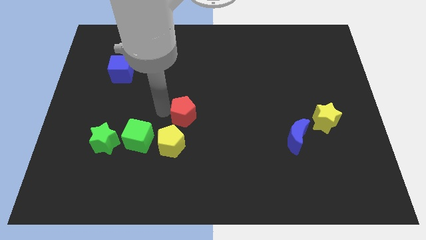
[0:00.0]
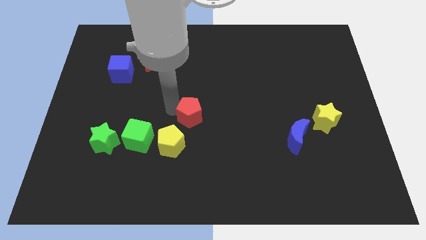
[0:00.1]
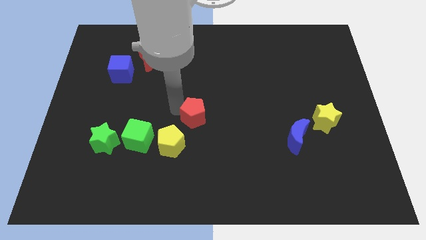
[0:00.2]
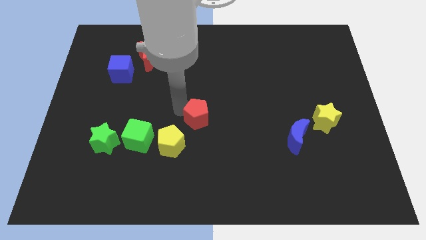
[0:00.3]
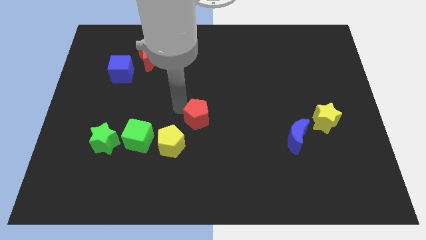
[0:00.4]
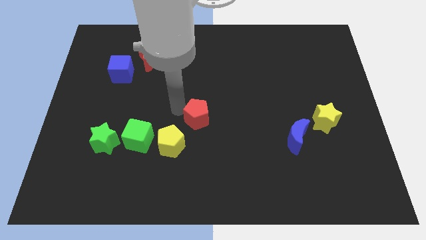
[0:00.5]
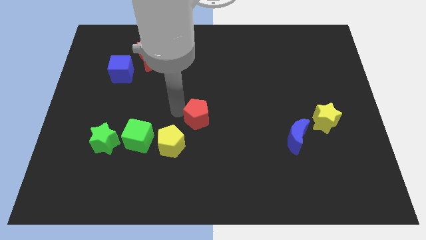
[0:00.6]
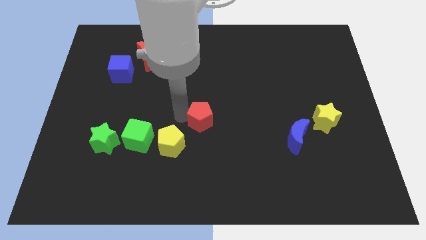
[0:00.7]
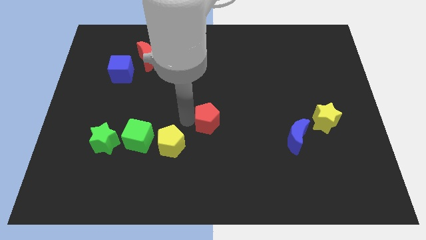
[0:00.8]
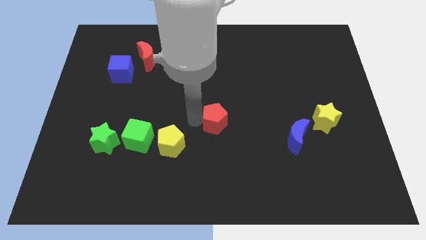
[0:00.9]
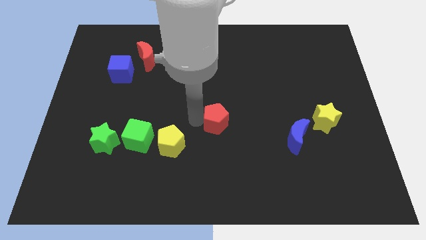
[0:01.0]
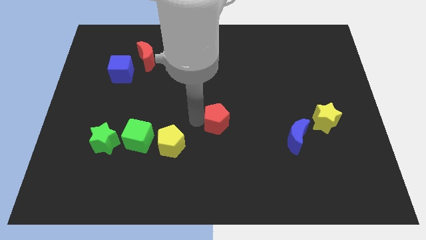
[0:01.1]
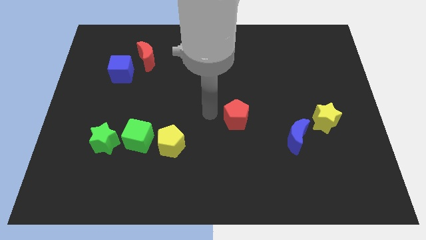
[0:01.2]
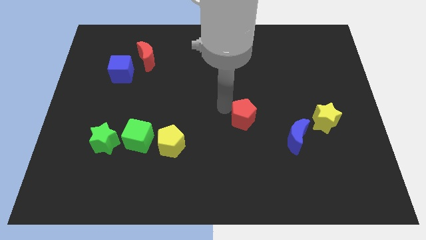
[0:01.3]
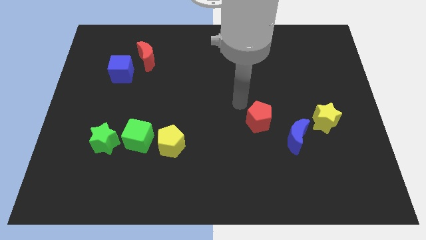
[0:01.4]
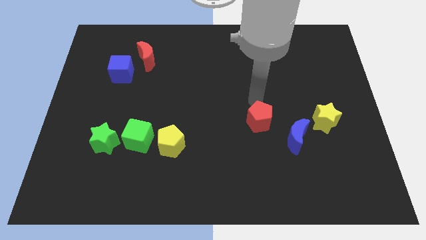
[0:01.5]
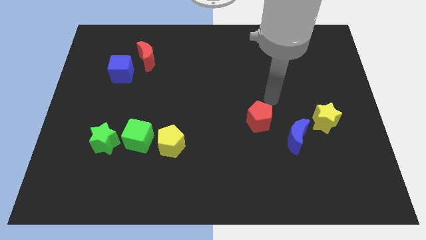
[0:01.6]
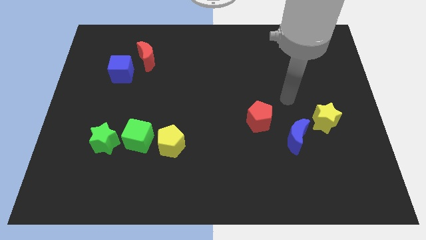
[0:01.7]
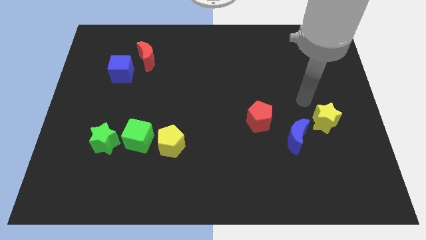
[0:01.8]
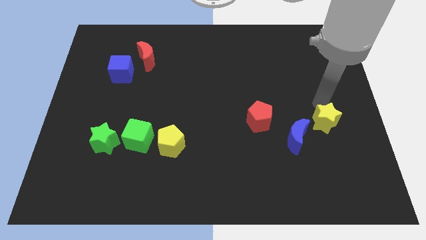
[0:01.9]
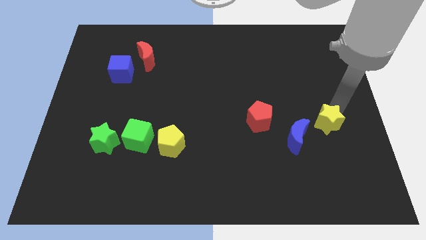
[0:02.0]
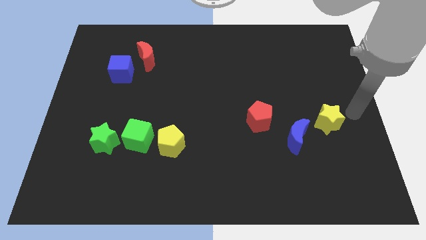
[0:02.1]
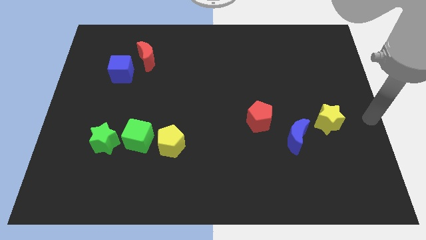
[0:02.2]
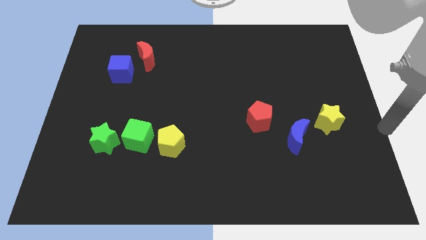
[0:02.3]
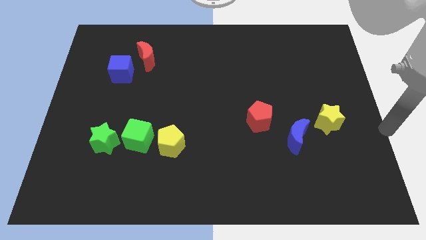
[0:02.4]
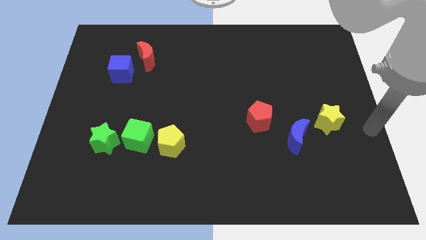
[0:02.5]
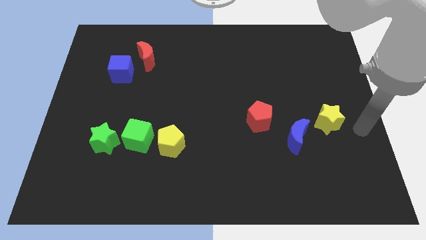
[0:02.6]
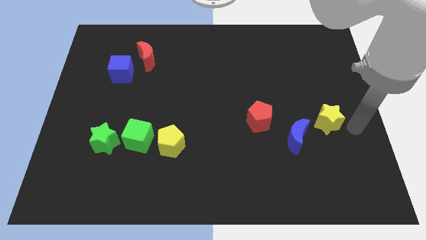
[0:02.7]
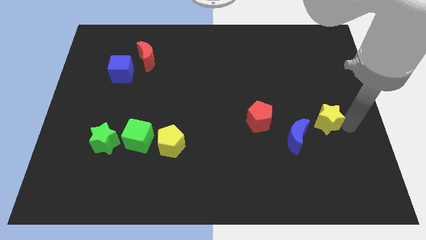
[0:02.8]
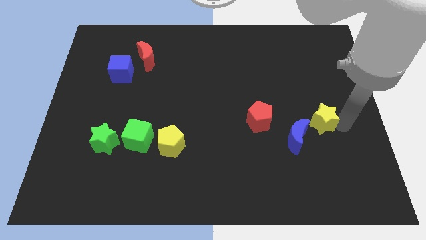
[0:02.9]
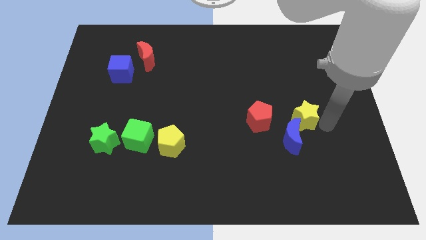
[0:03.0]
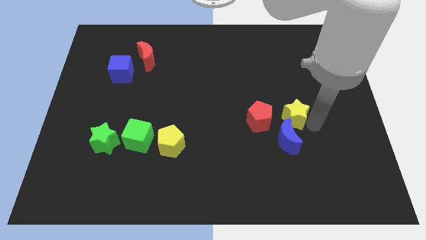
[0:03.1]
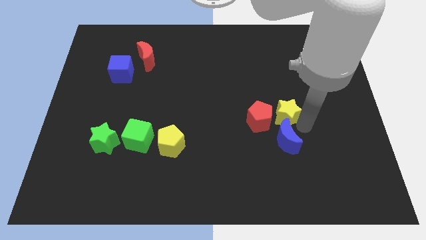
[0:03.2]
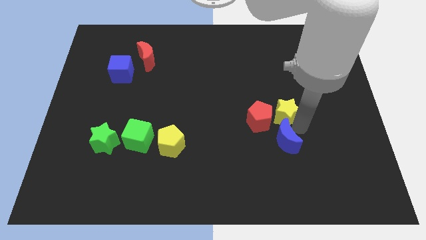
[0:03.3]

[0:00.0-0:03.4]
group up the red pentagon blue moon and yellow star at the right side of the table

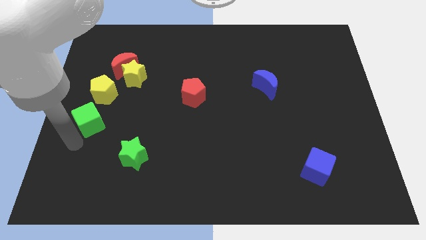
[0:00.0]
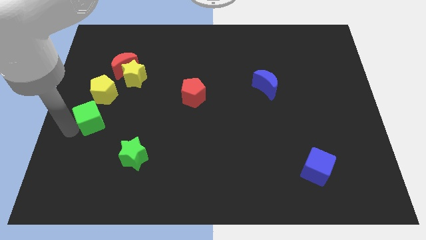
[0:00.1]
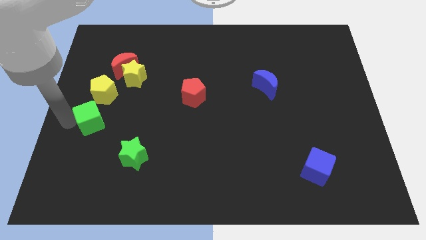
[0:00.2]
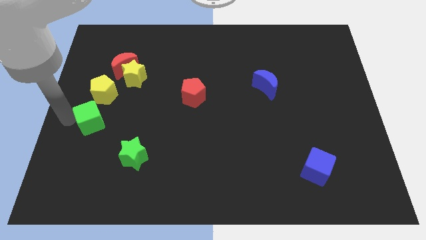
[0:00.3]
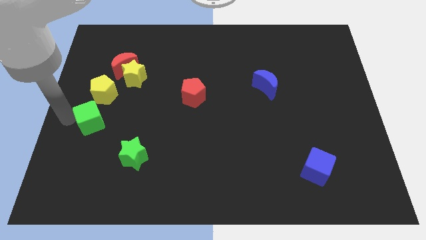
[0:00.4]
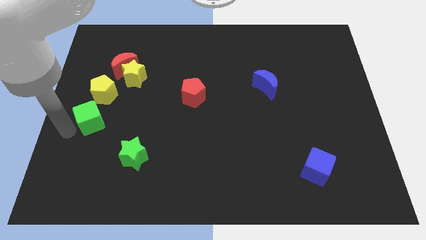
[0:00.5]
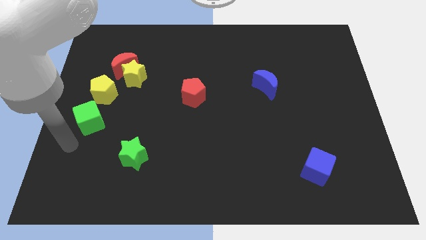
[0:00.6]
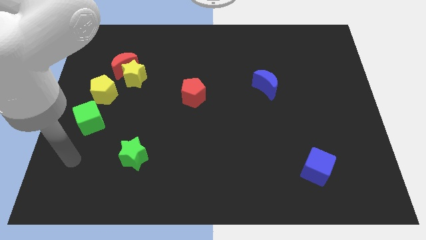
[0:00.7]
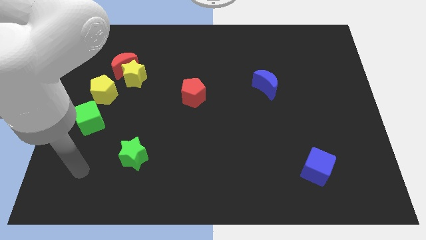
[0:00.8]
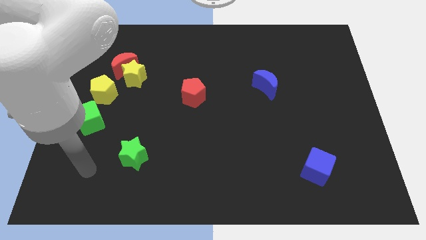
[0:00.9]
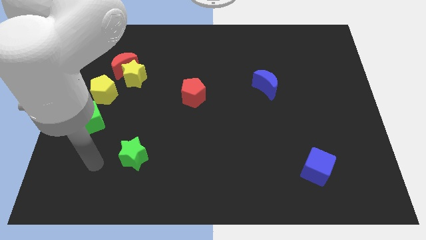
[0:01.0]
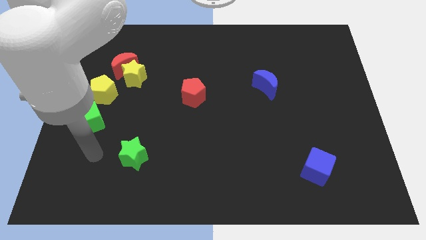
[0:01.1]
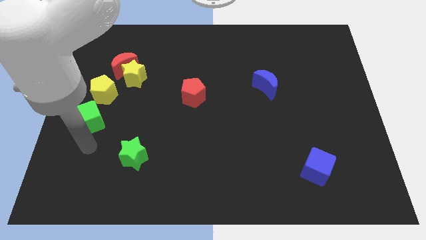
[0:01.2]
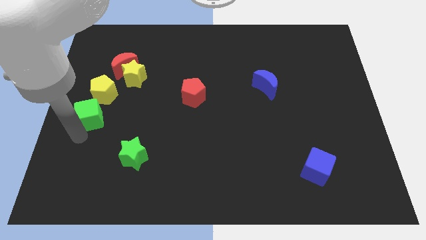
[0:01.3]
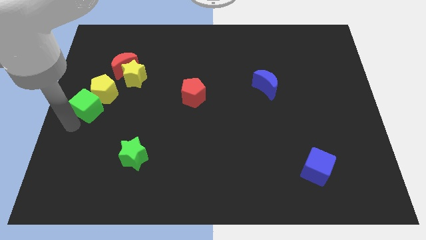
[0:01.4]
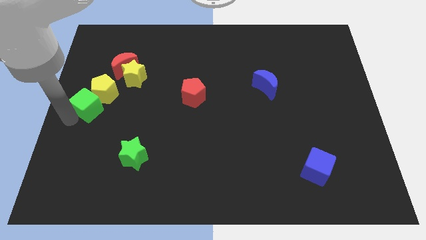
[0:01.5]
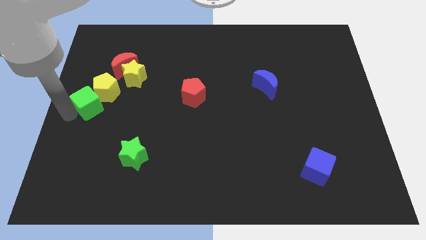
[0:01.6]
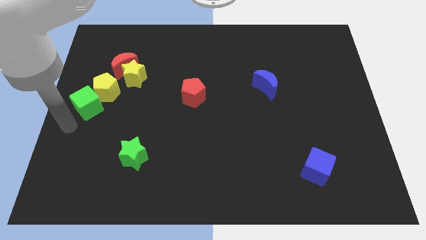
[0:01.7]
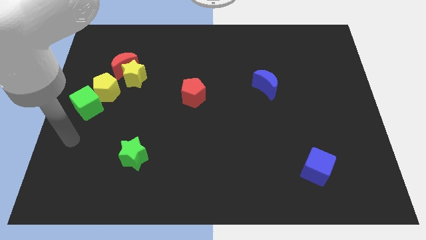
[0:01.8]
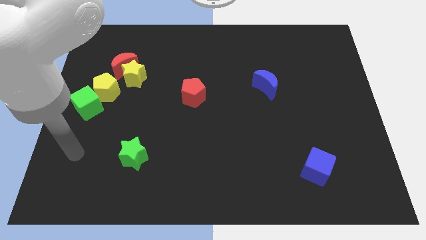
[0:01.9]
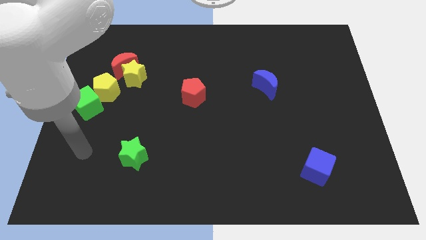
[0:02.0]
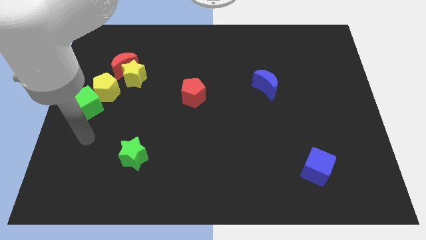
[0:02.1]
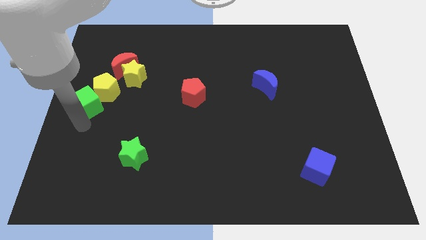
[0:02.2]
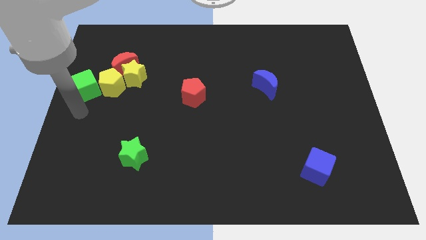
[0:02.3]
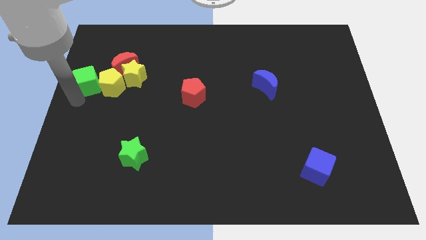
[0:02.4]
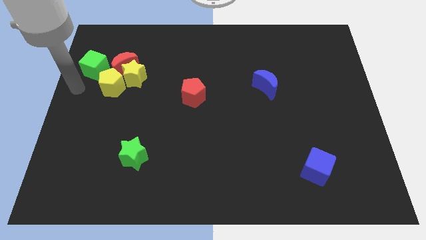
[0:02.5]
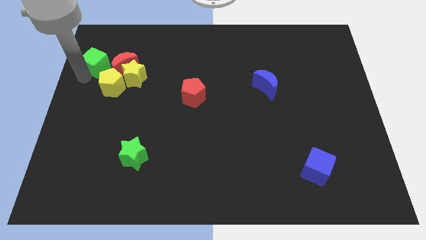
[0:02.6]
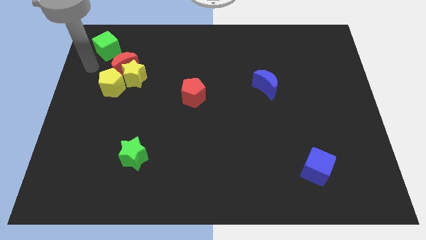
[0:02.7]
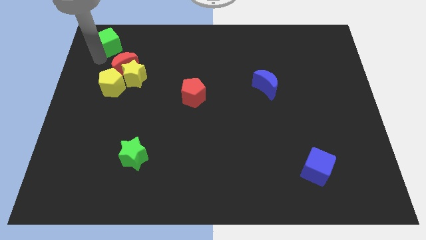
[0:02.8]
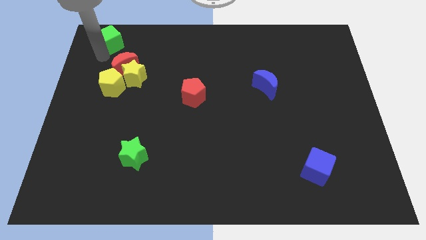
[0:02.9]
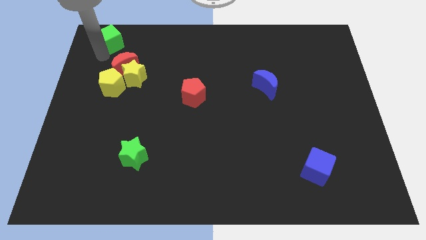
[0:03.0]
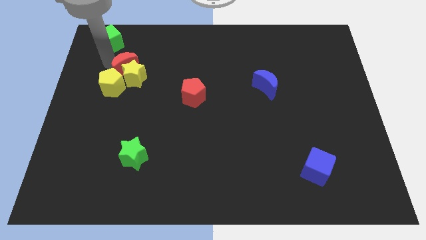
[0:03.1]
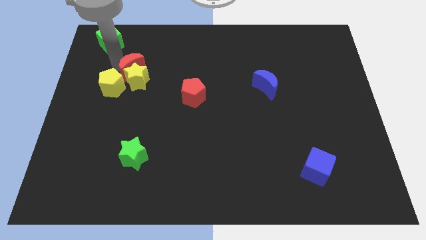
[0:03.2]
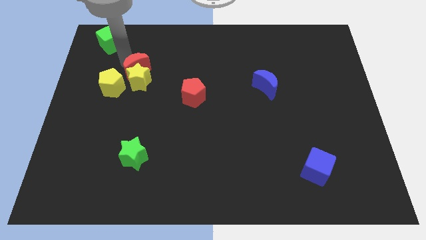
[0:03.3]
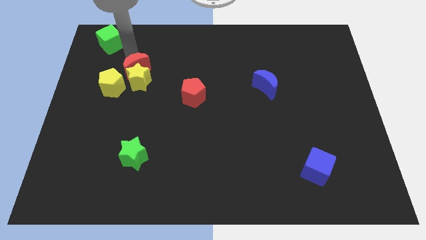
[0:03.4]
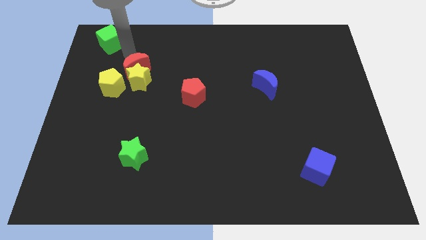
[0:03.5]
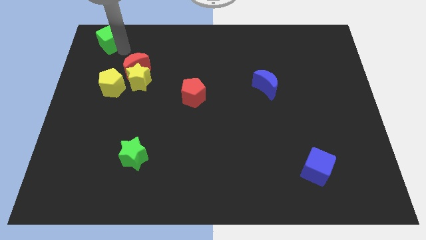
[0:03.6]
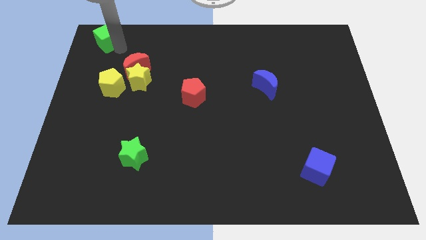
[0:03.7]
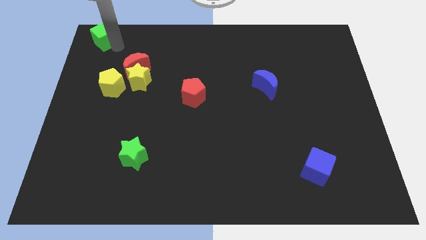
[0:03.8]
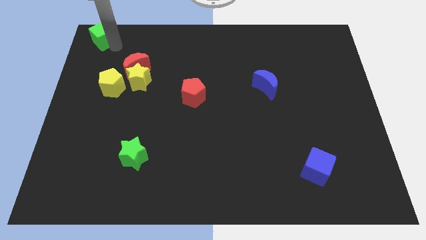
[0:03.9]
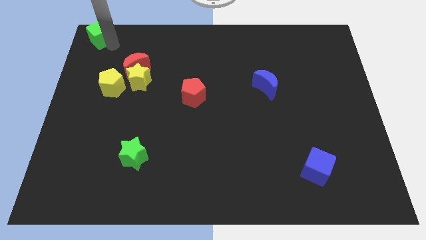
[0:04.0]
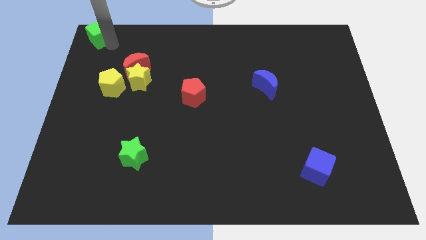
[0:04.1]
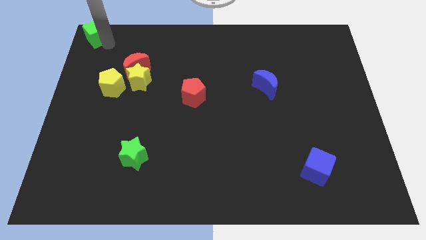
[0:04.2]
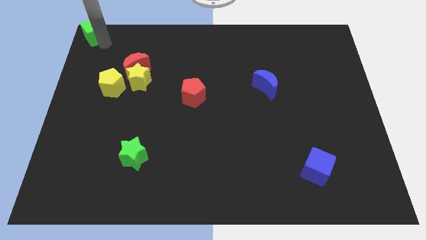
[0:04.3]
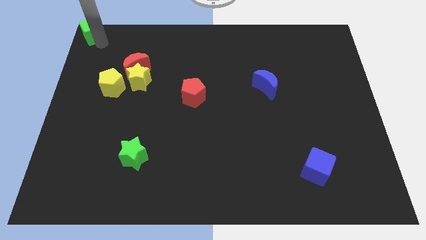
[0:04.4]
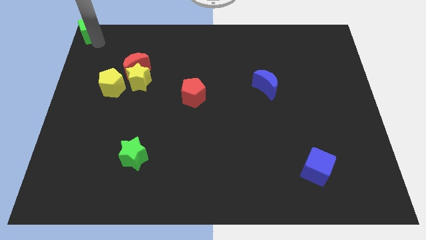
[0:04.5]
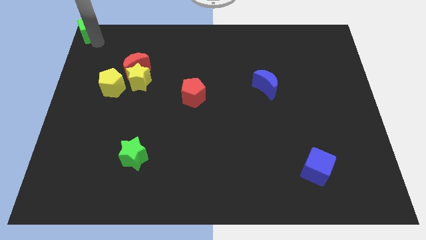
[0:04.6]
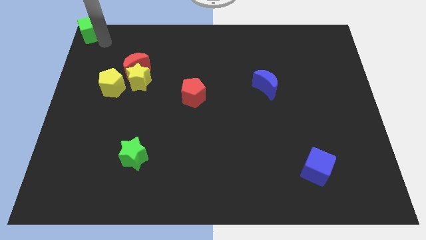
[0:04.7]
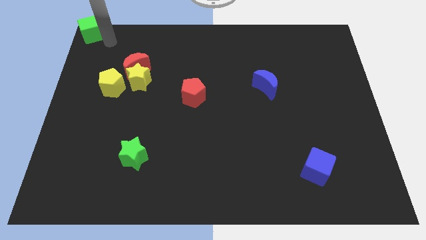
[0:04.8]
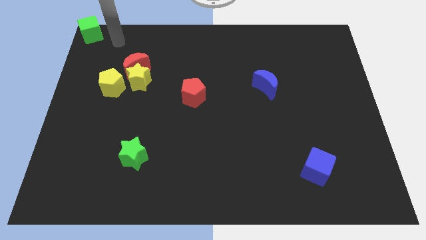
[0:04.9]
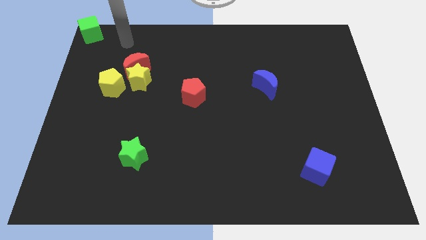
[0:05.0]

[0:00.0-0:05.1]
push the green cube to the top left corner of the board

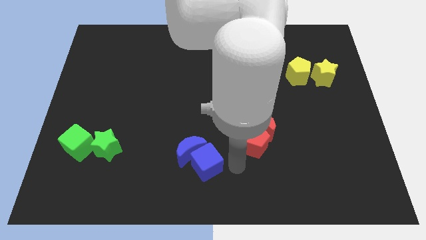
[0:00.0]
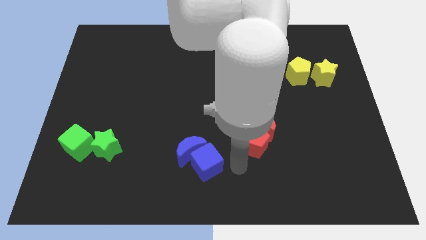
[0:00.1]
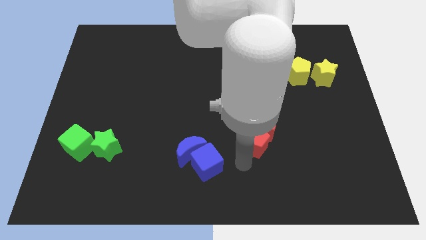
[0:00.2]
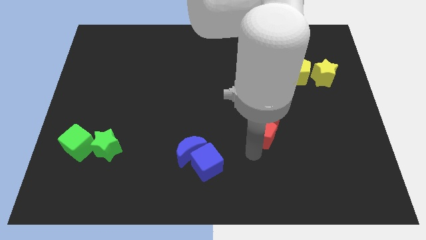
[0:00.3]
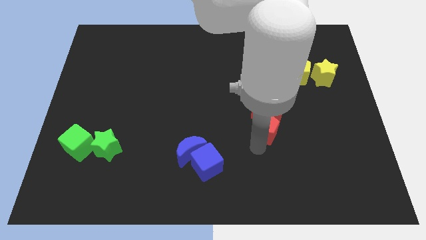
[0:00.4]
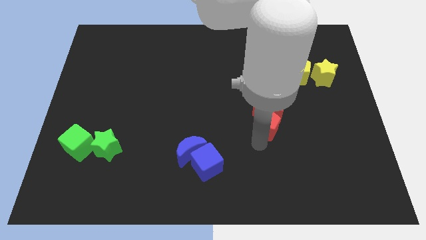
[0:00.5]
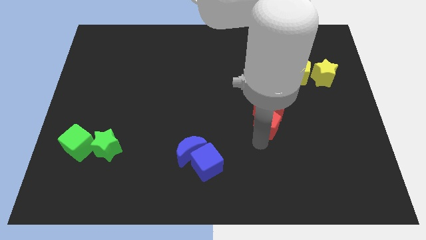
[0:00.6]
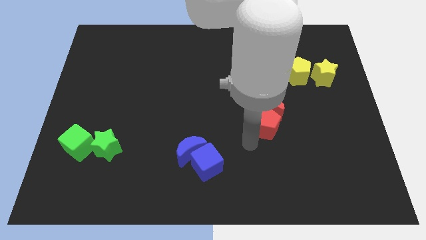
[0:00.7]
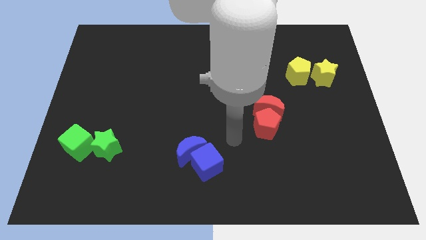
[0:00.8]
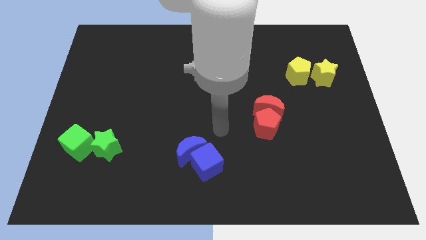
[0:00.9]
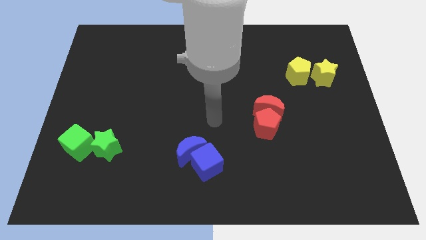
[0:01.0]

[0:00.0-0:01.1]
slightly move the red pentagon into red crescent
